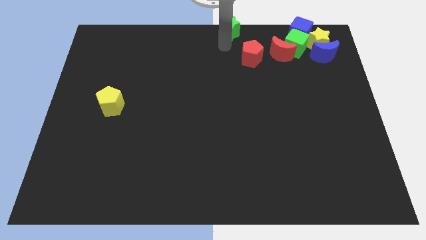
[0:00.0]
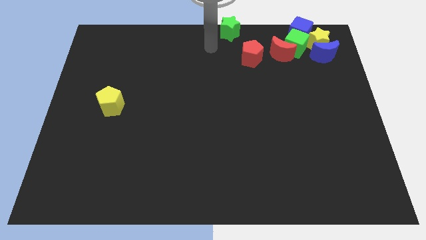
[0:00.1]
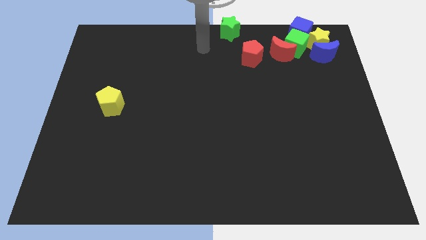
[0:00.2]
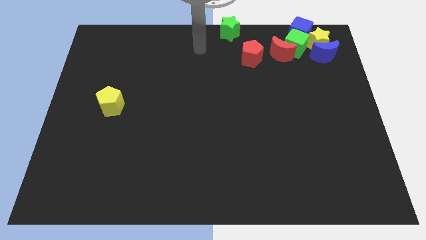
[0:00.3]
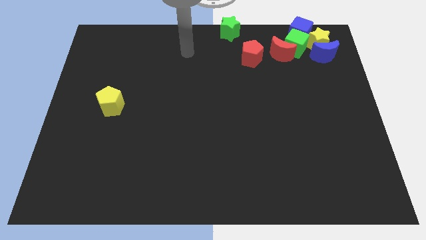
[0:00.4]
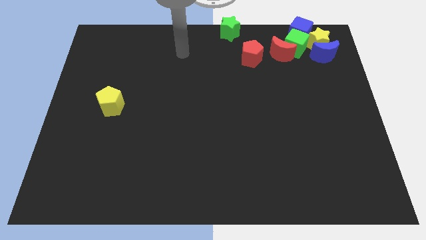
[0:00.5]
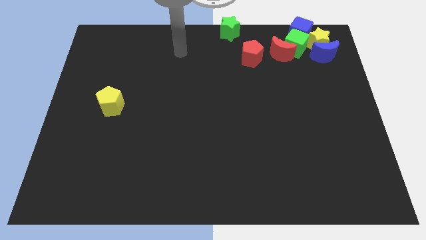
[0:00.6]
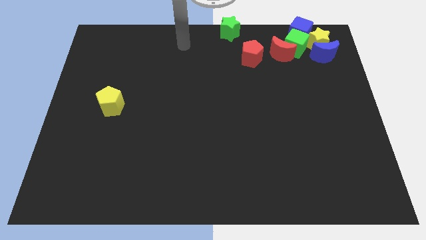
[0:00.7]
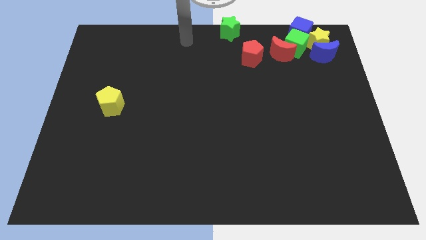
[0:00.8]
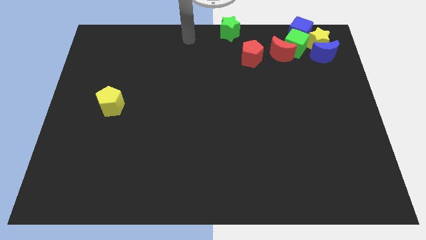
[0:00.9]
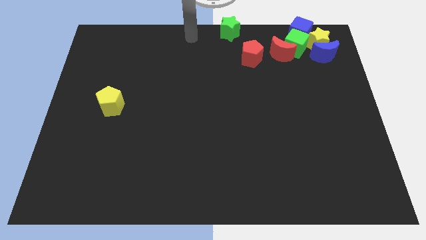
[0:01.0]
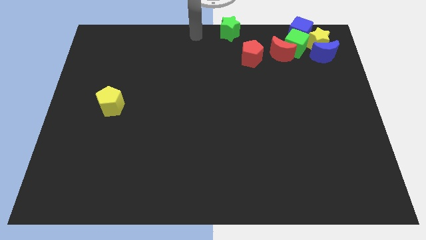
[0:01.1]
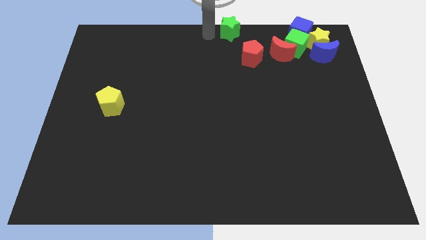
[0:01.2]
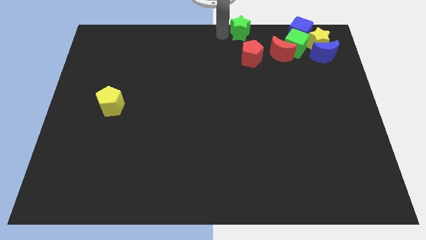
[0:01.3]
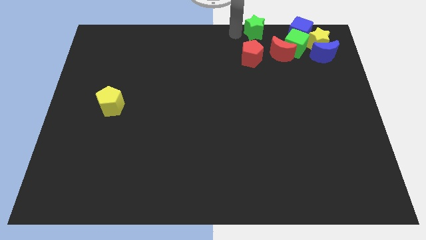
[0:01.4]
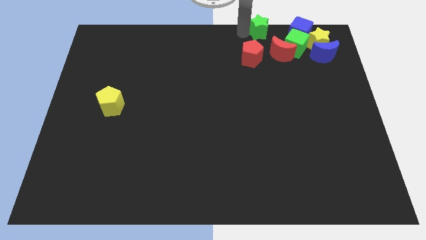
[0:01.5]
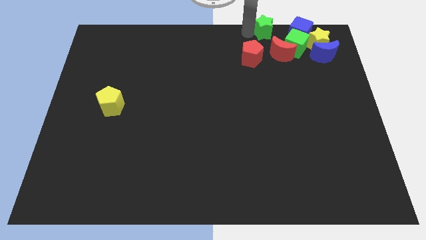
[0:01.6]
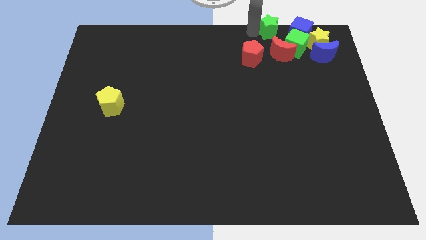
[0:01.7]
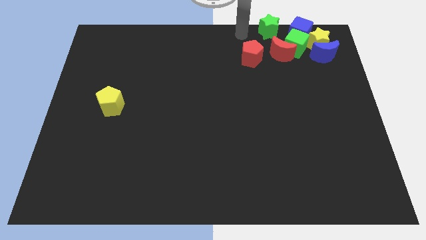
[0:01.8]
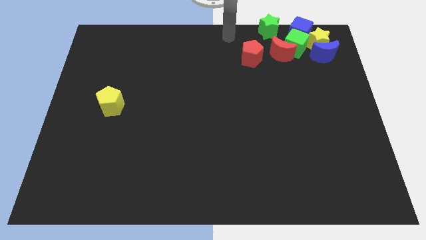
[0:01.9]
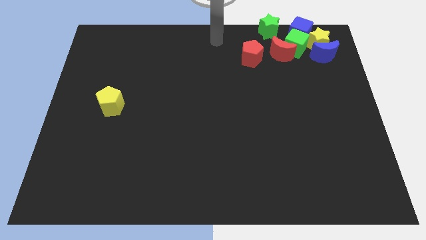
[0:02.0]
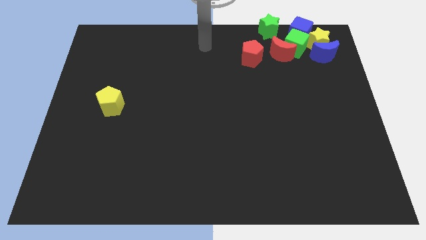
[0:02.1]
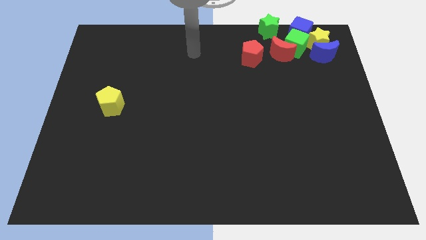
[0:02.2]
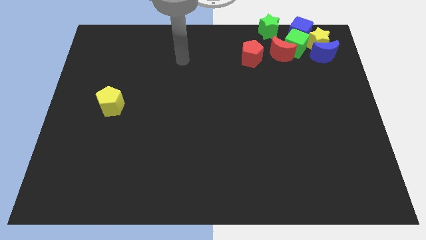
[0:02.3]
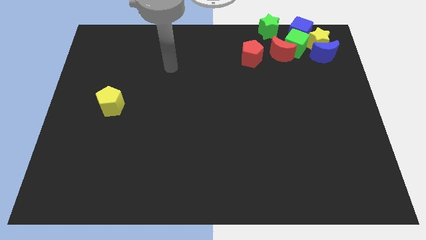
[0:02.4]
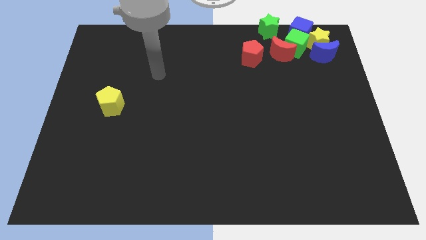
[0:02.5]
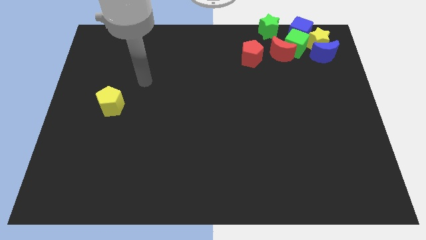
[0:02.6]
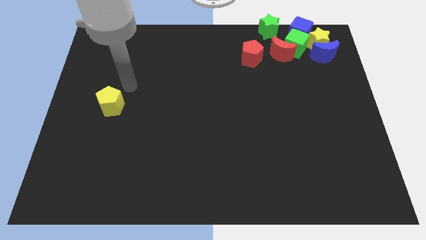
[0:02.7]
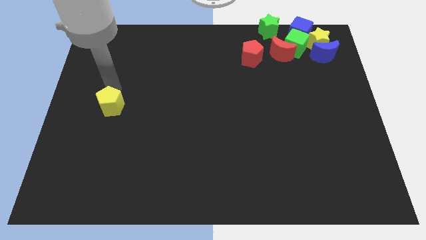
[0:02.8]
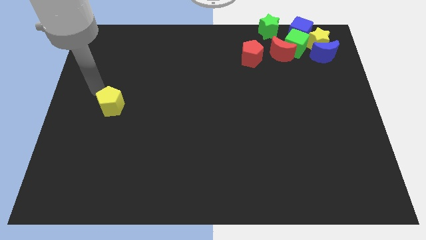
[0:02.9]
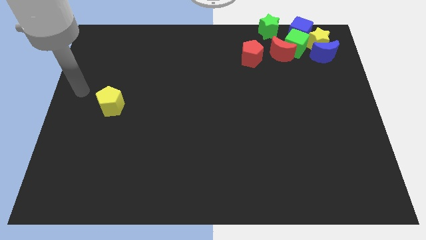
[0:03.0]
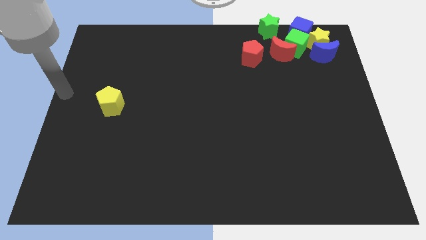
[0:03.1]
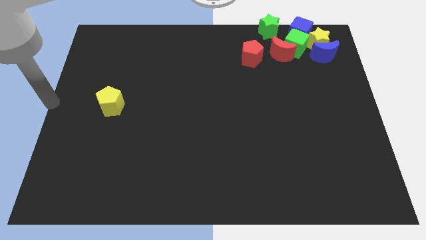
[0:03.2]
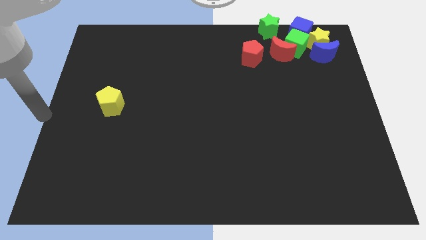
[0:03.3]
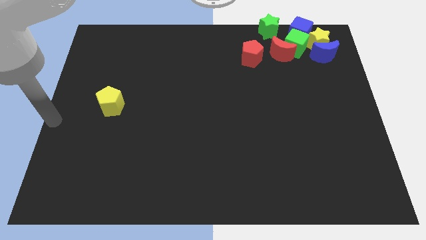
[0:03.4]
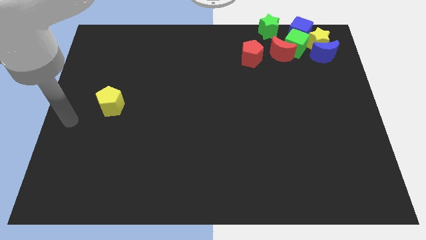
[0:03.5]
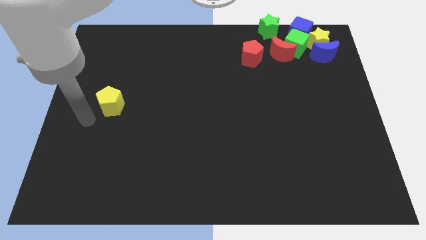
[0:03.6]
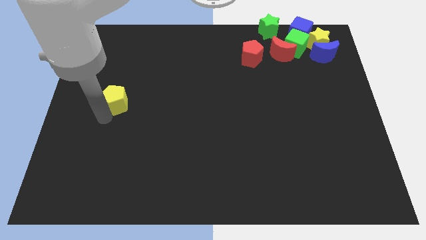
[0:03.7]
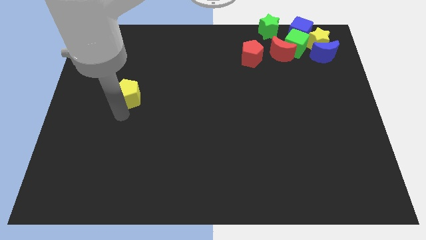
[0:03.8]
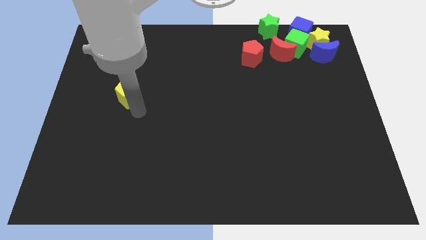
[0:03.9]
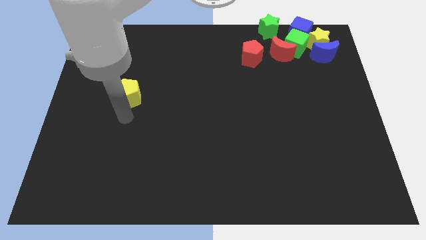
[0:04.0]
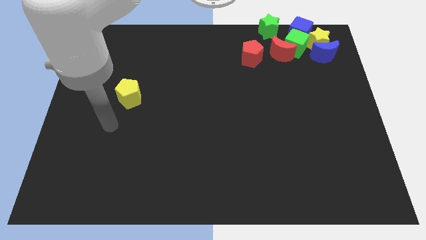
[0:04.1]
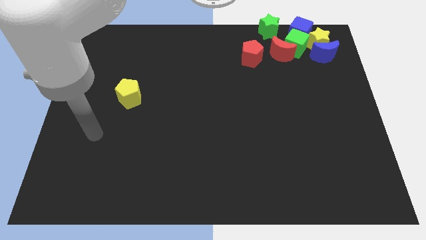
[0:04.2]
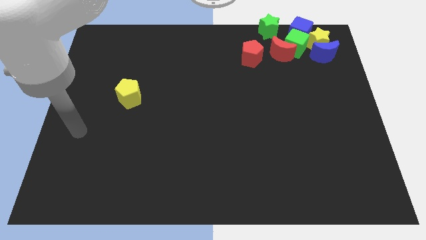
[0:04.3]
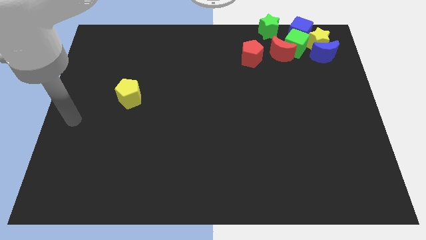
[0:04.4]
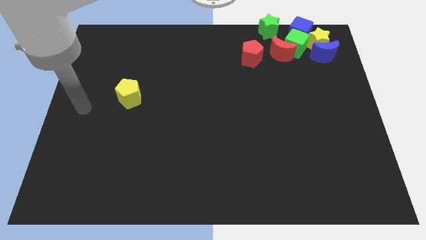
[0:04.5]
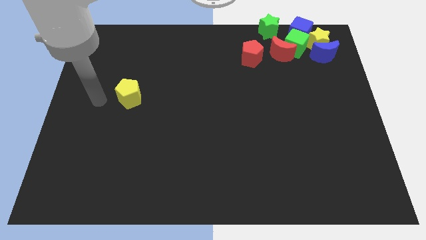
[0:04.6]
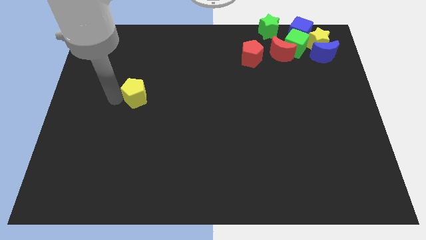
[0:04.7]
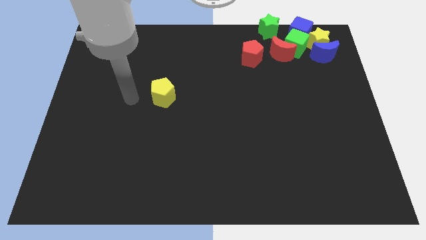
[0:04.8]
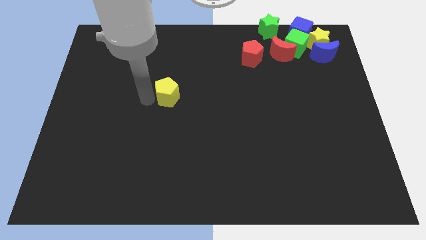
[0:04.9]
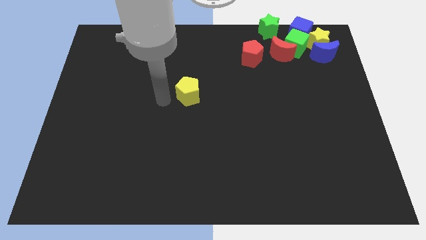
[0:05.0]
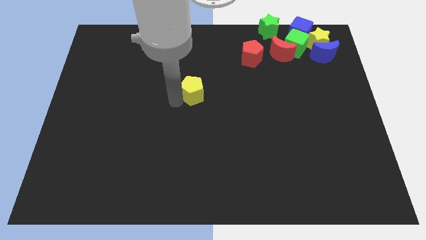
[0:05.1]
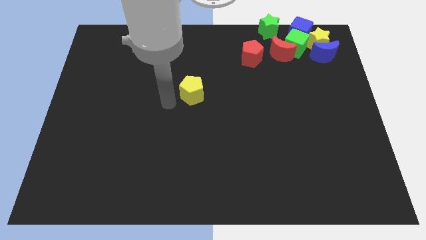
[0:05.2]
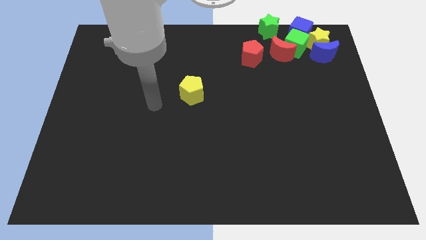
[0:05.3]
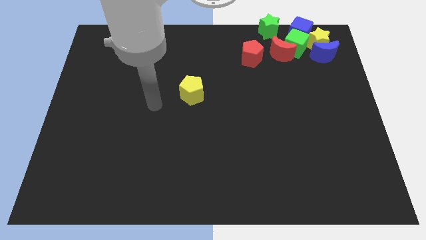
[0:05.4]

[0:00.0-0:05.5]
move yellow pentagon towards red pentagon

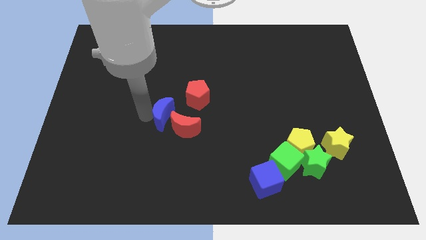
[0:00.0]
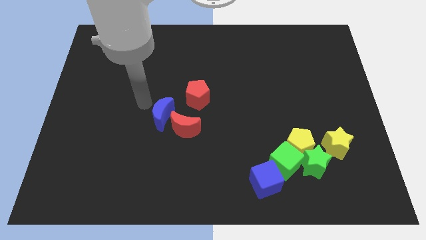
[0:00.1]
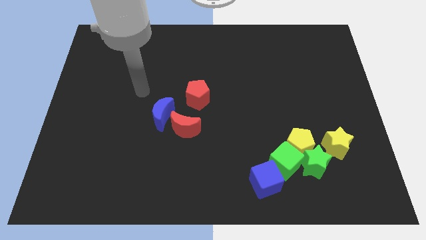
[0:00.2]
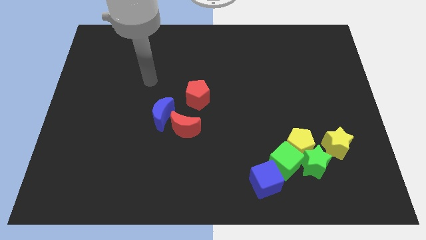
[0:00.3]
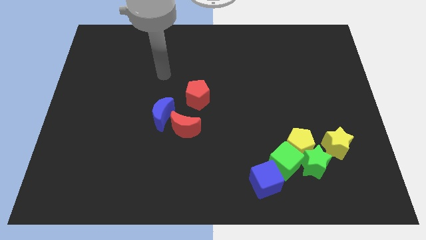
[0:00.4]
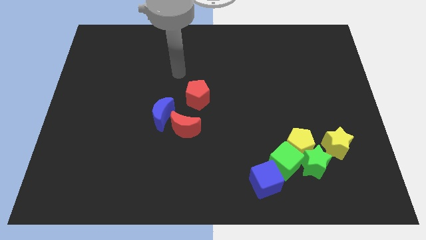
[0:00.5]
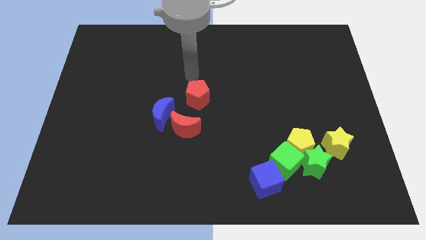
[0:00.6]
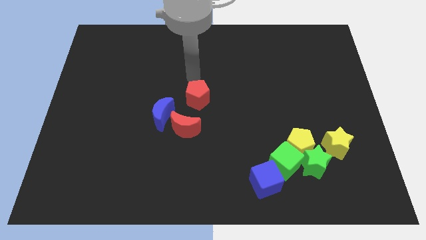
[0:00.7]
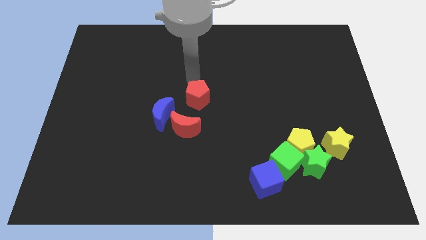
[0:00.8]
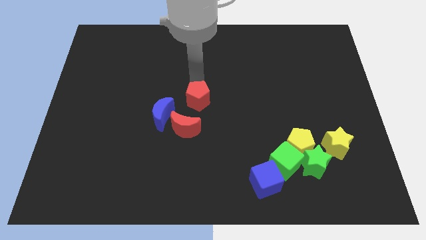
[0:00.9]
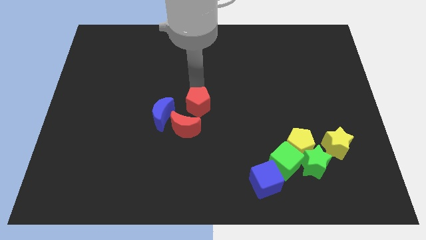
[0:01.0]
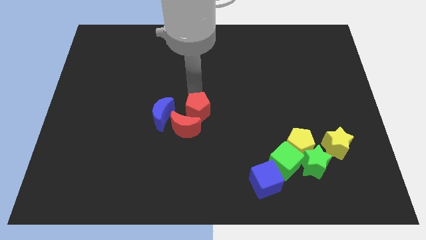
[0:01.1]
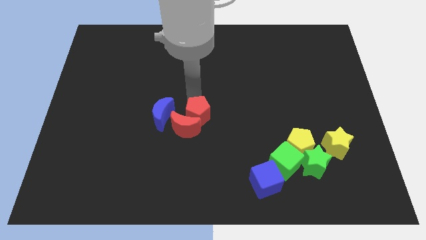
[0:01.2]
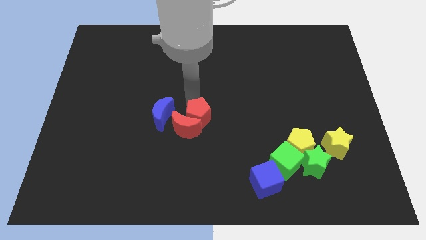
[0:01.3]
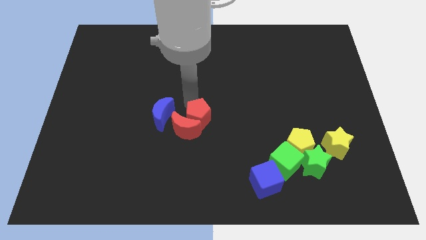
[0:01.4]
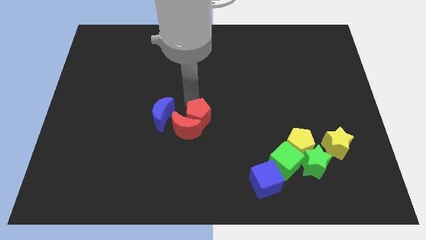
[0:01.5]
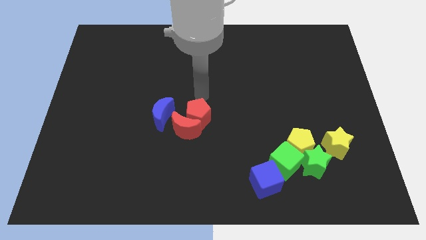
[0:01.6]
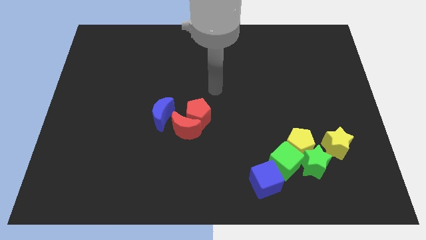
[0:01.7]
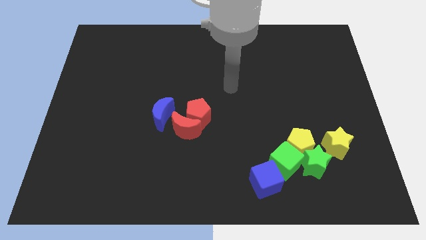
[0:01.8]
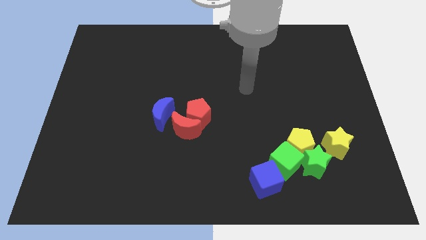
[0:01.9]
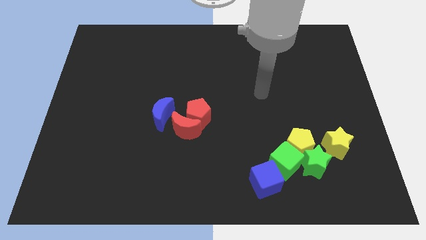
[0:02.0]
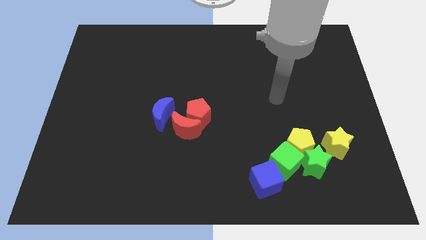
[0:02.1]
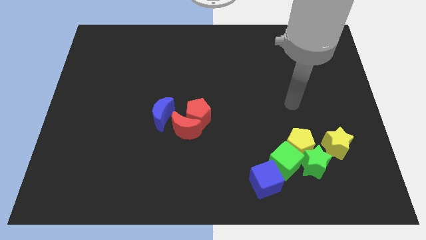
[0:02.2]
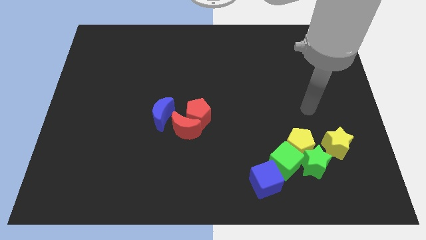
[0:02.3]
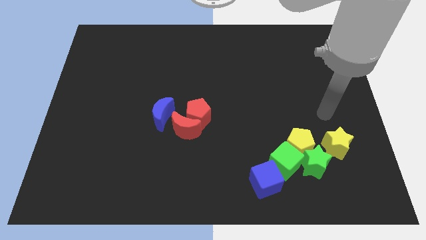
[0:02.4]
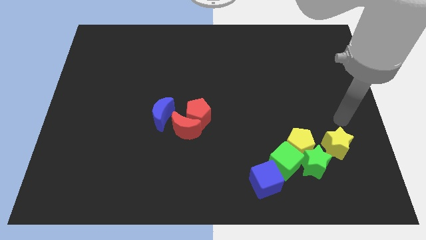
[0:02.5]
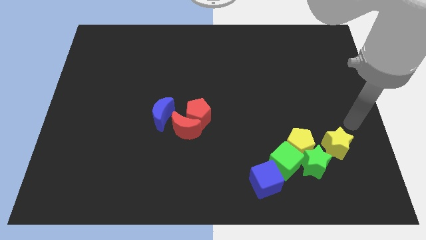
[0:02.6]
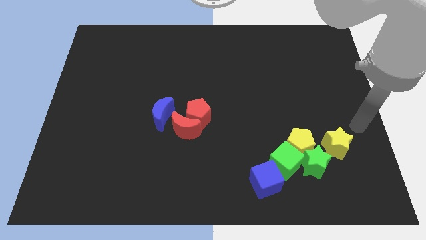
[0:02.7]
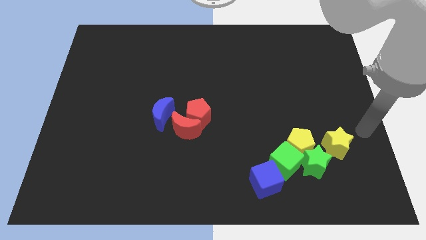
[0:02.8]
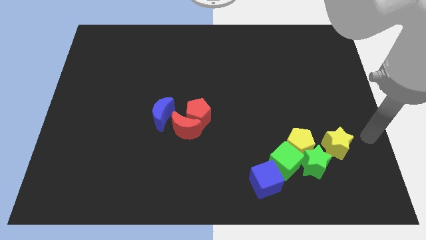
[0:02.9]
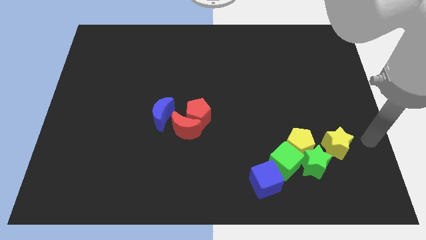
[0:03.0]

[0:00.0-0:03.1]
move red pentagon close to the red moon

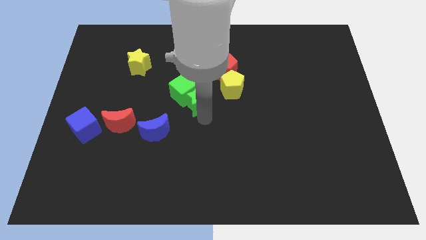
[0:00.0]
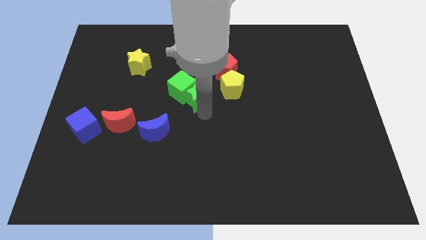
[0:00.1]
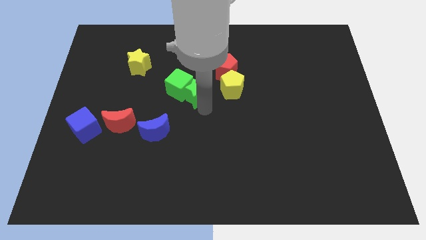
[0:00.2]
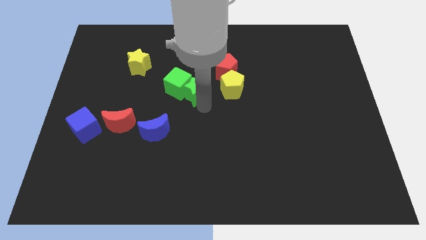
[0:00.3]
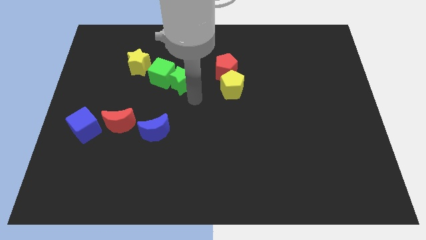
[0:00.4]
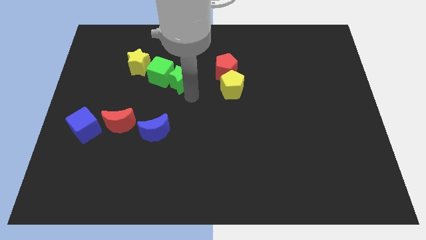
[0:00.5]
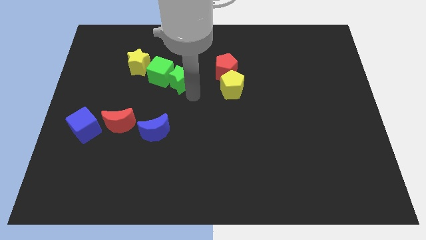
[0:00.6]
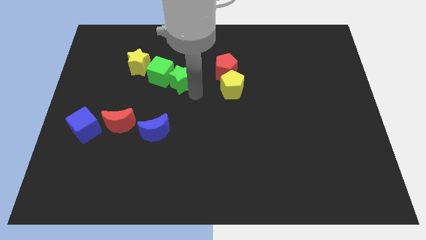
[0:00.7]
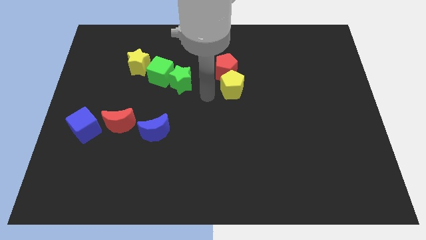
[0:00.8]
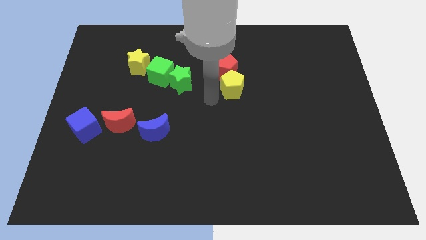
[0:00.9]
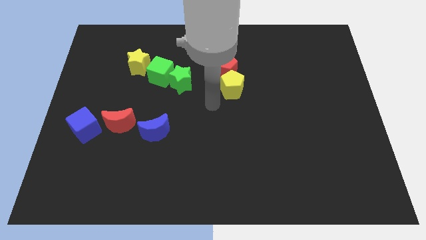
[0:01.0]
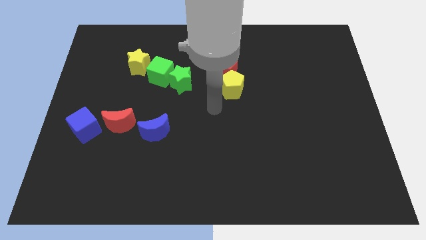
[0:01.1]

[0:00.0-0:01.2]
push the green blocks towards the yellow star
